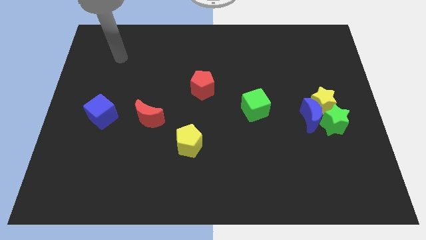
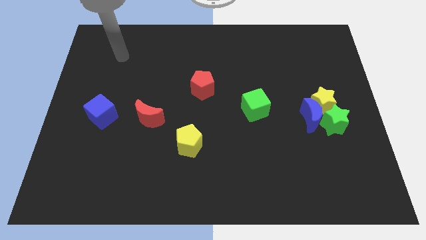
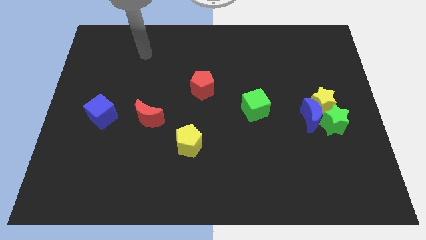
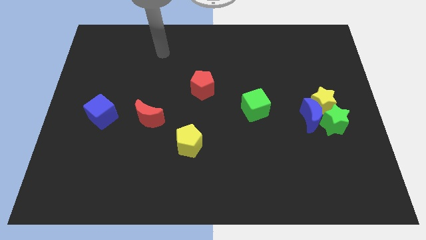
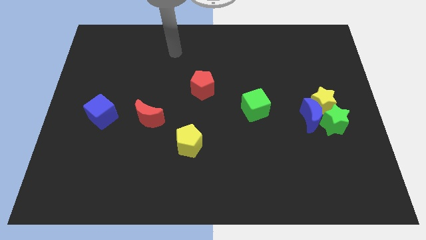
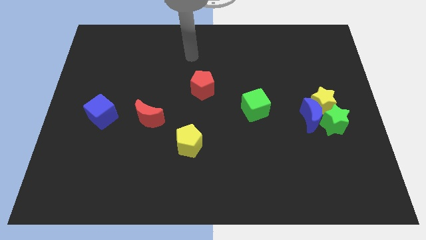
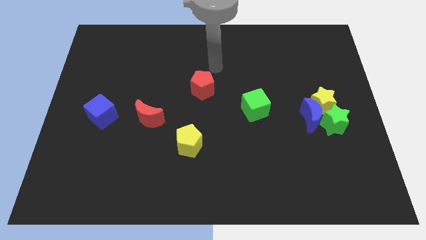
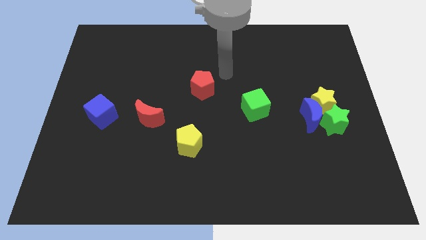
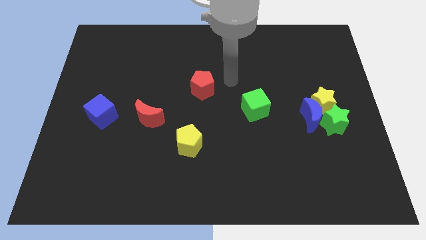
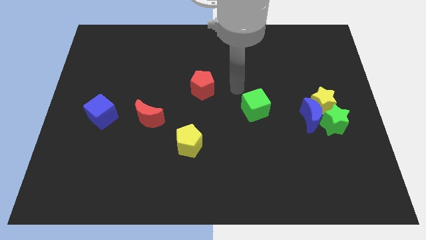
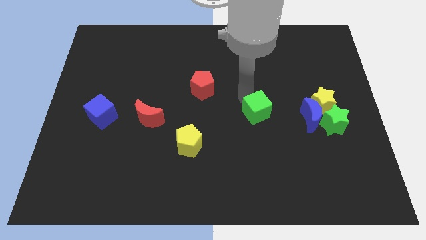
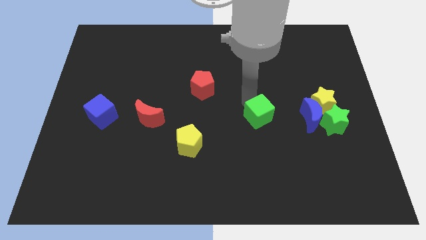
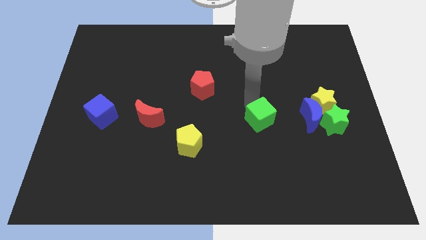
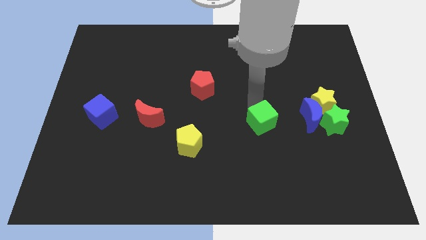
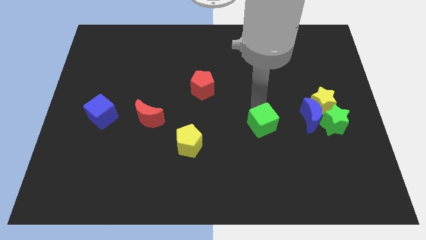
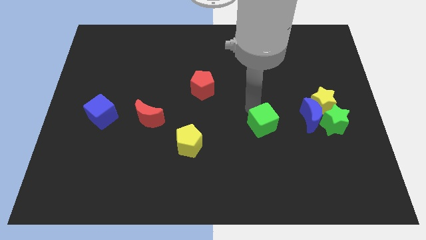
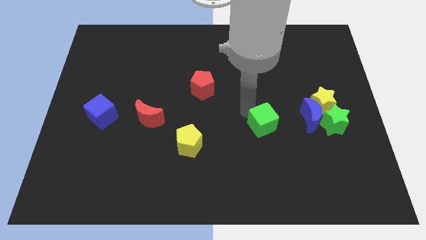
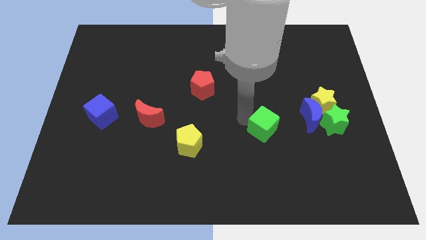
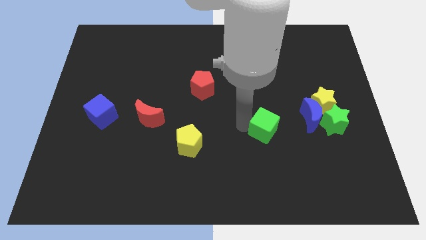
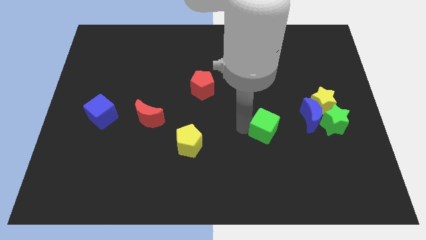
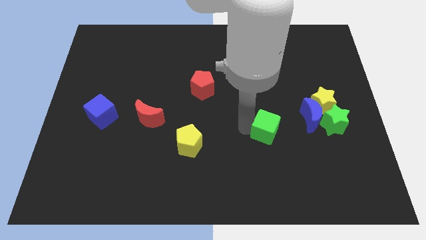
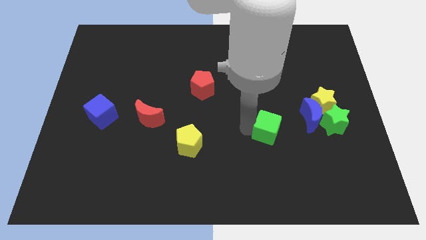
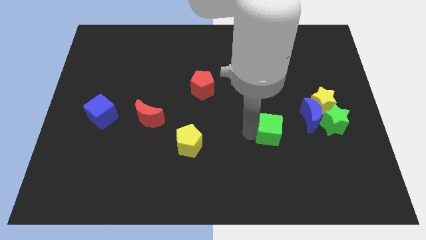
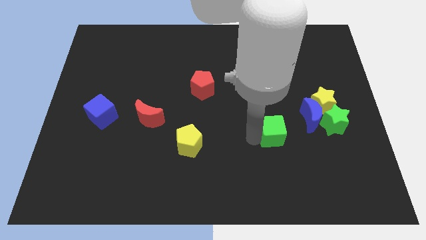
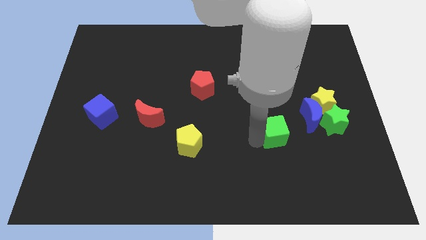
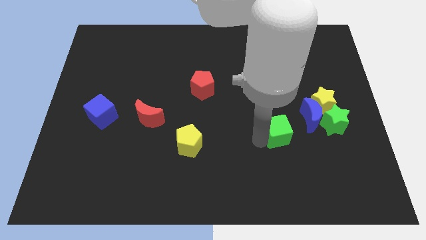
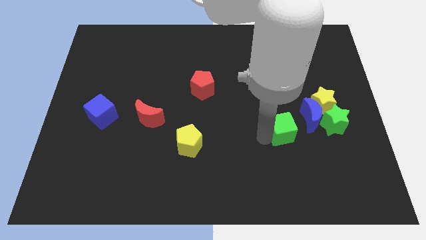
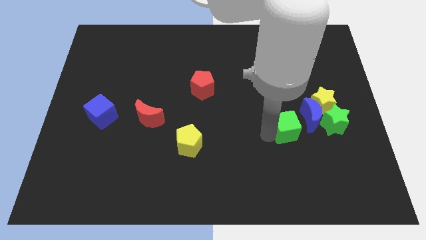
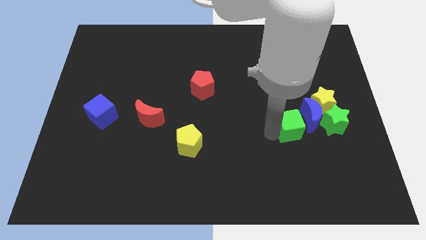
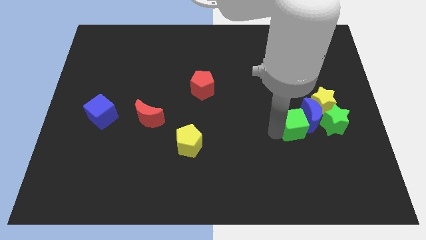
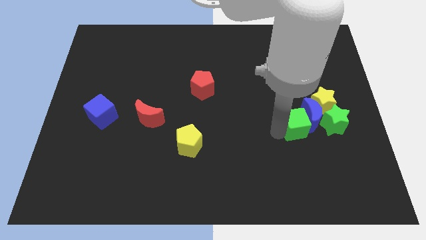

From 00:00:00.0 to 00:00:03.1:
slide the green cube to the blue moon

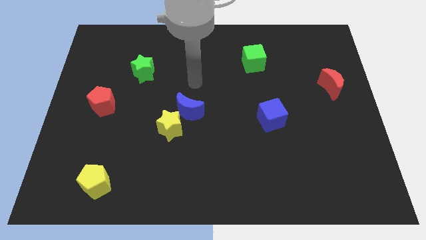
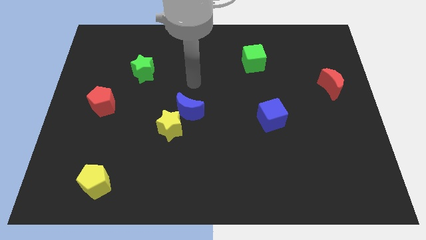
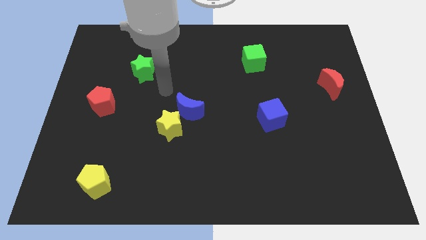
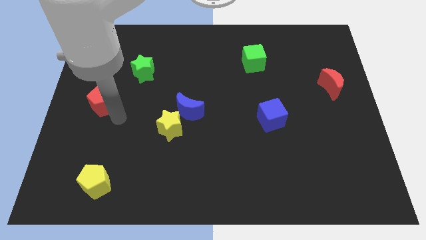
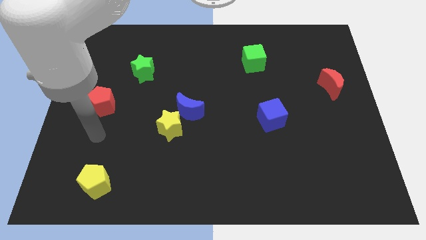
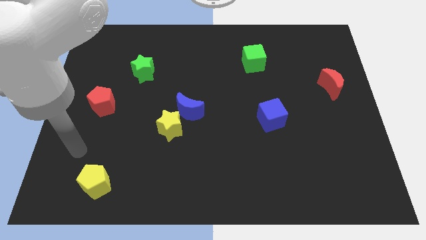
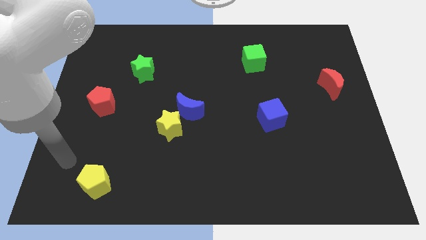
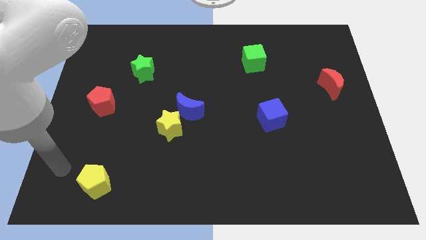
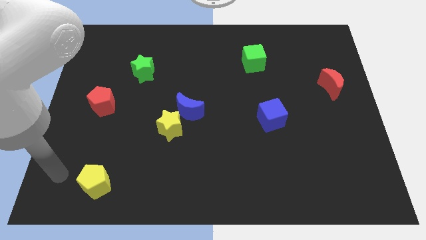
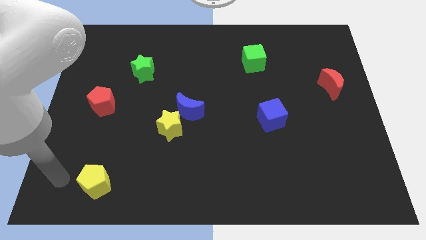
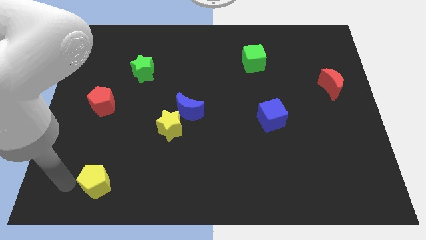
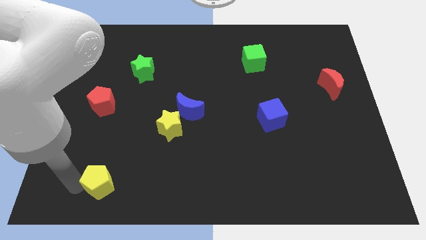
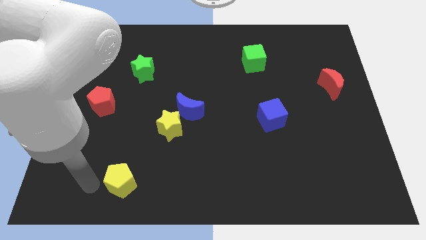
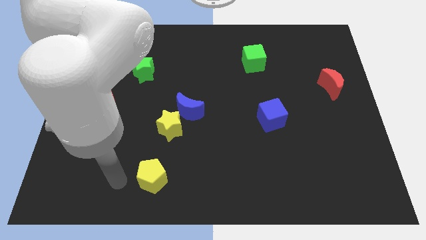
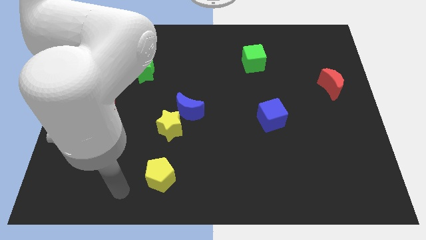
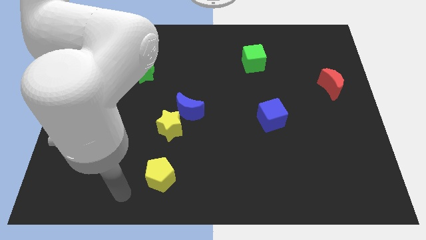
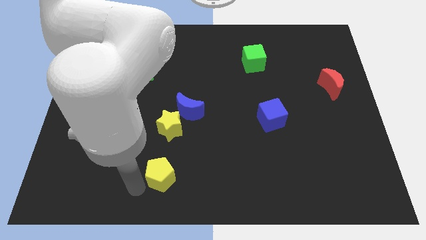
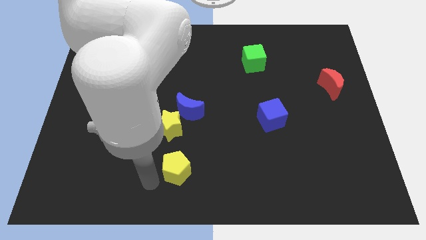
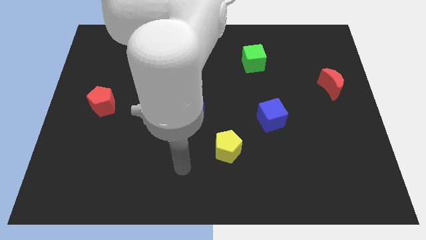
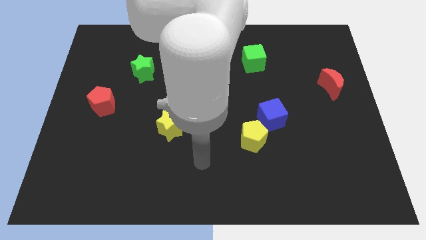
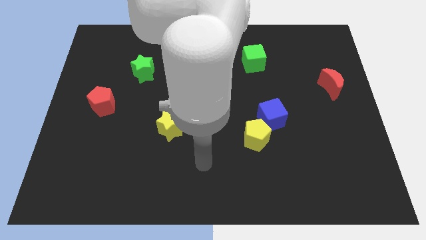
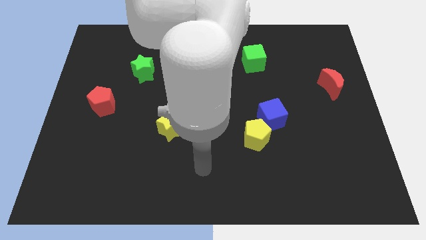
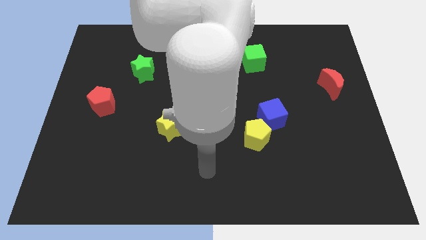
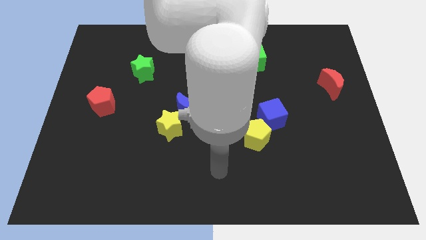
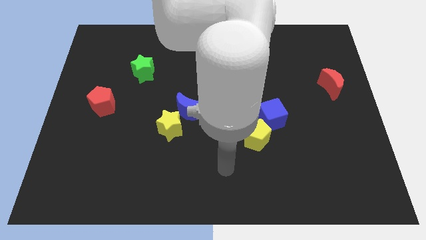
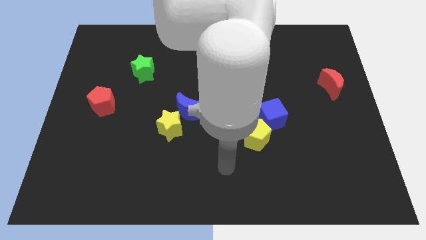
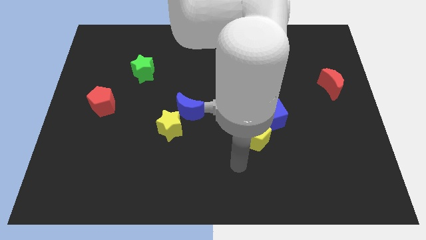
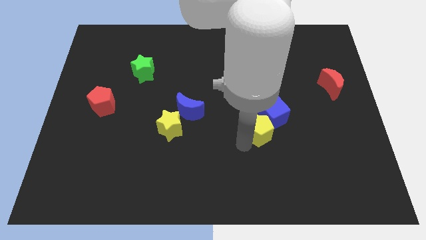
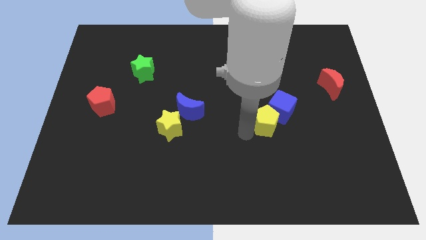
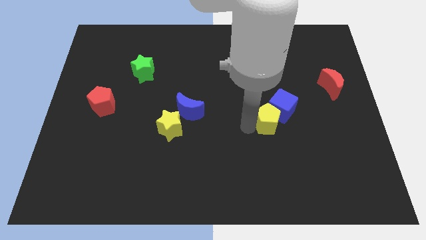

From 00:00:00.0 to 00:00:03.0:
push the yellow pentagon close to the blue cube

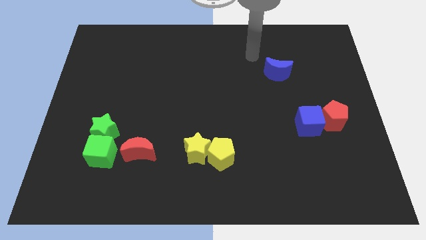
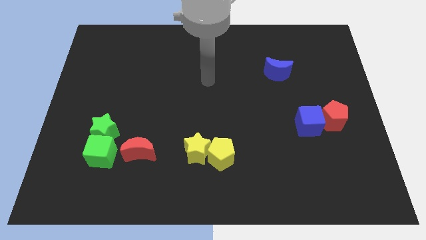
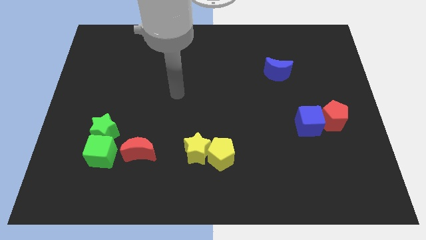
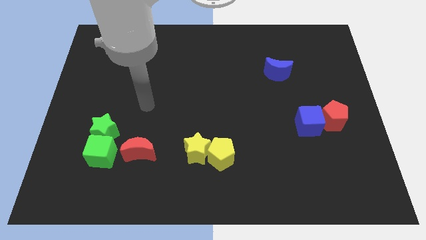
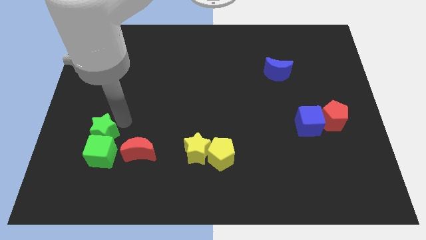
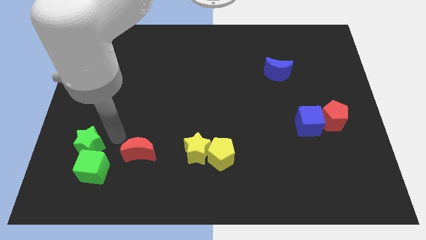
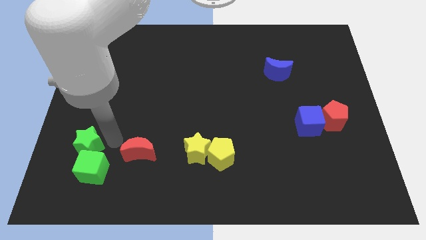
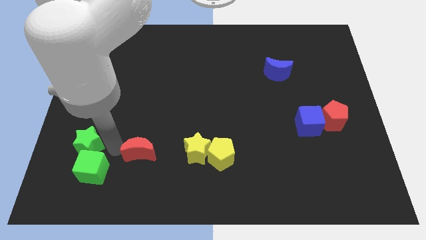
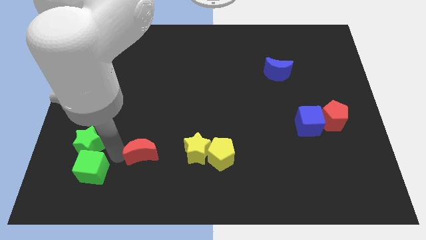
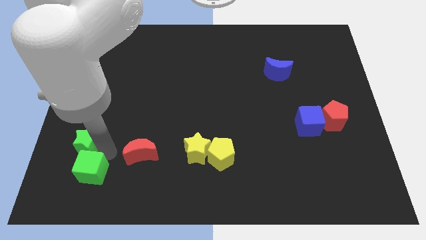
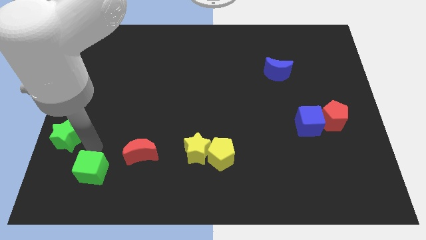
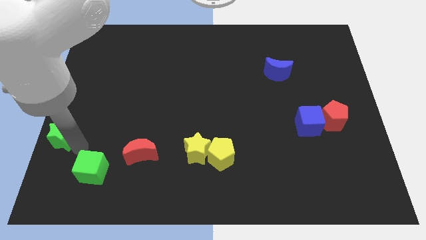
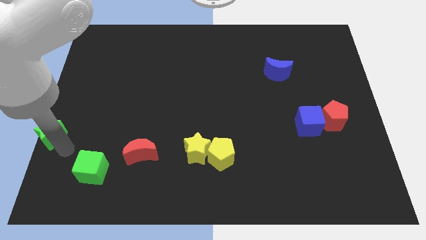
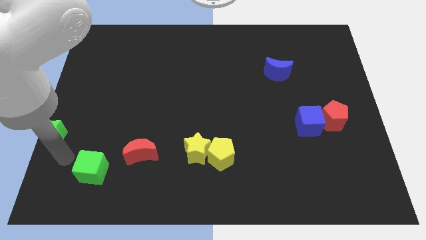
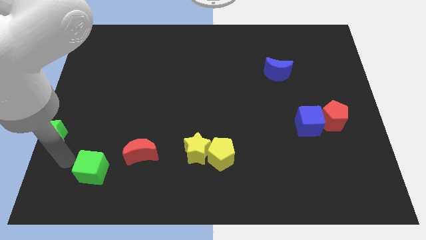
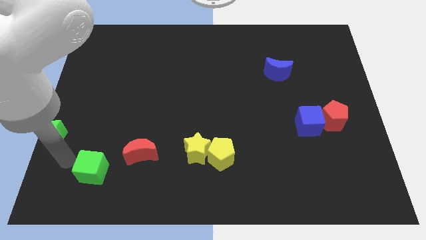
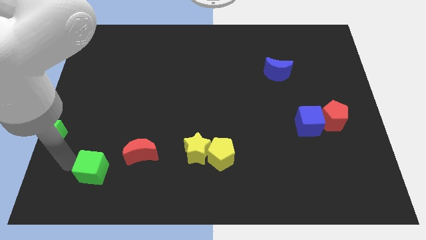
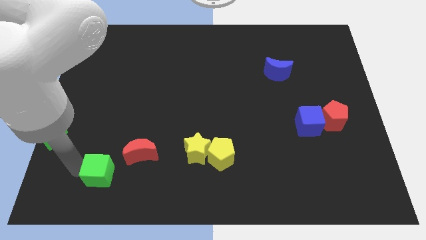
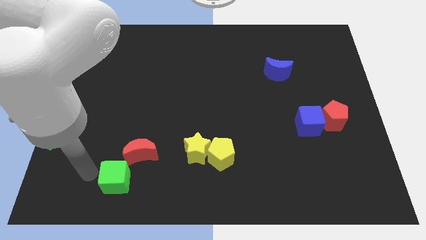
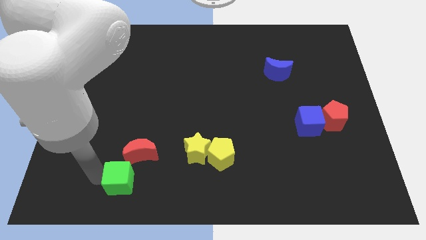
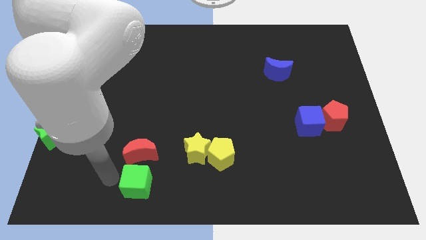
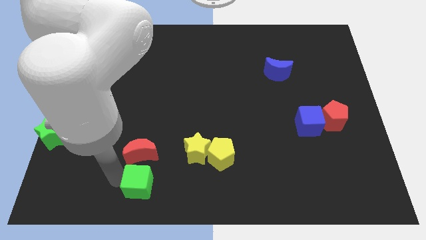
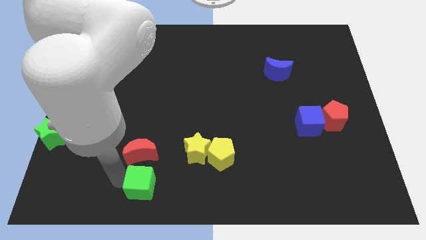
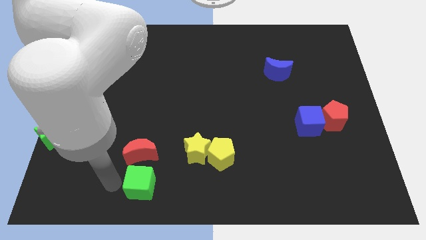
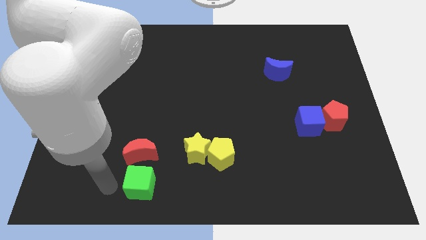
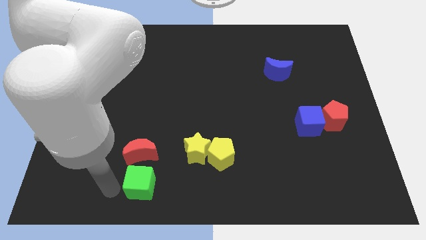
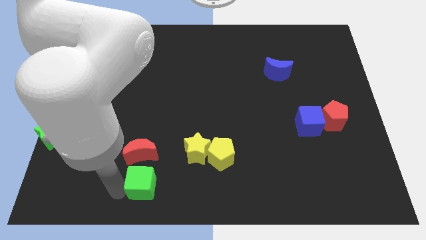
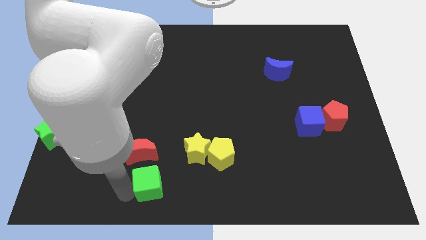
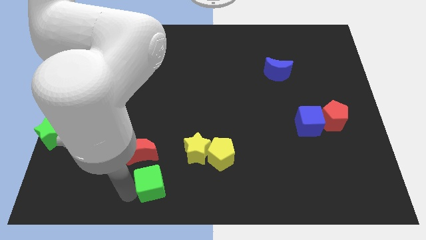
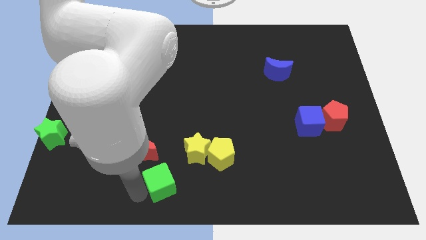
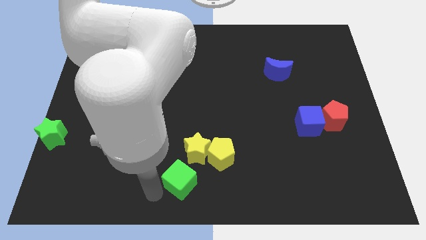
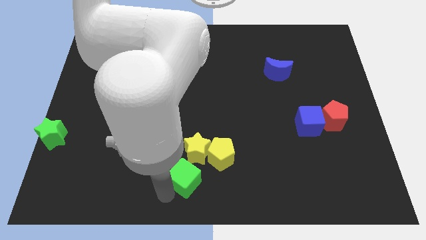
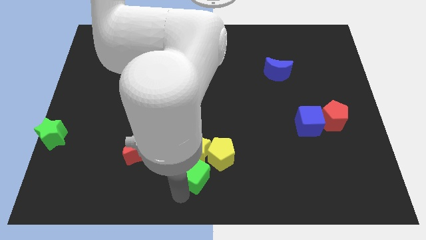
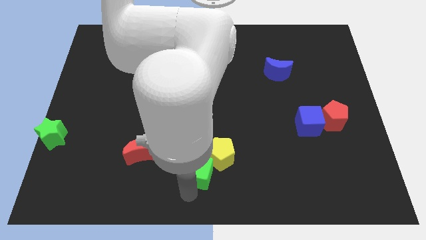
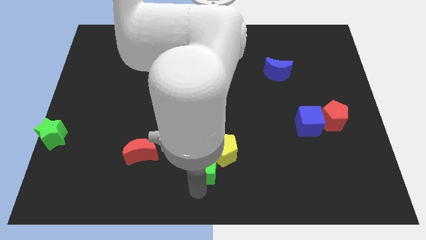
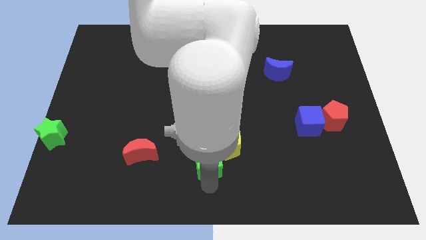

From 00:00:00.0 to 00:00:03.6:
slide the green cube next to the yellow pentagon
